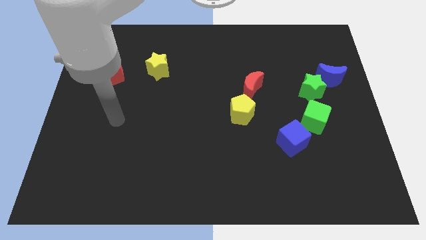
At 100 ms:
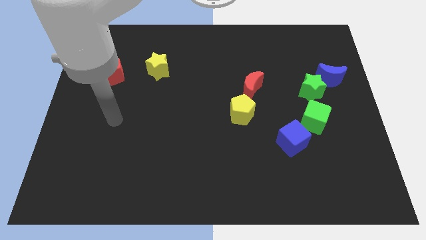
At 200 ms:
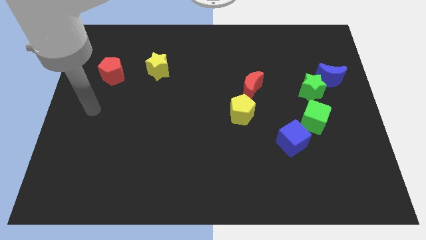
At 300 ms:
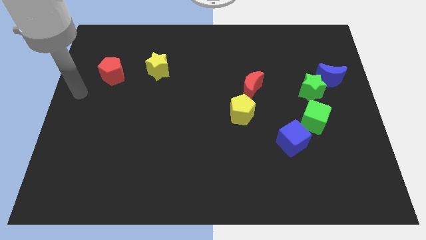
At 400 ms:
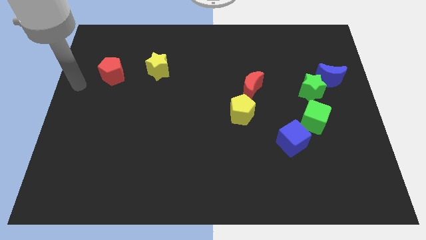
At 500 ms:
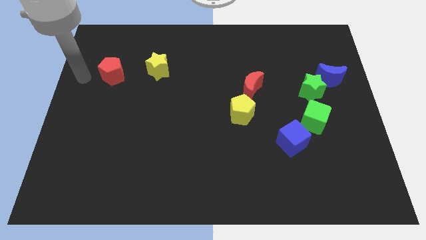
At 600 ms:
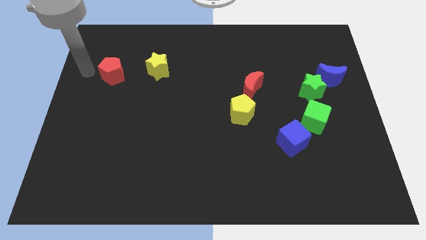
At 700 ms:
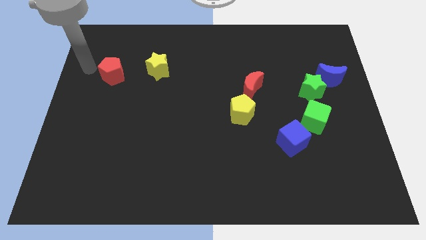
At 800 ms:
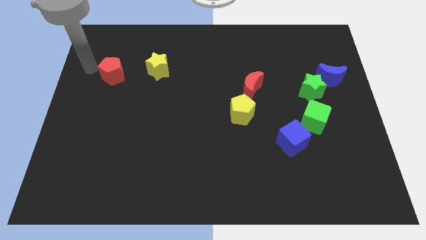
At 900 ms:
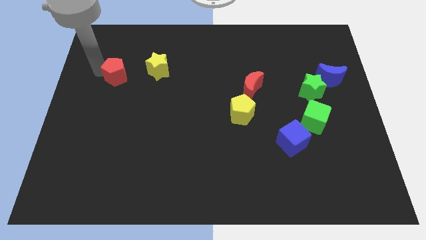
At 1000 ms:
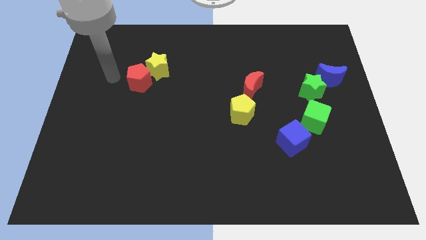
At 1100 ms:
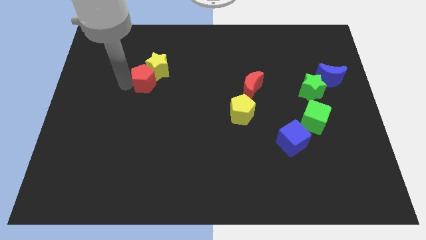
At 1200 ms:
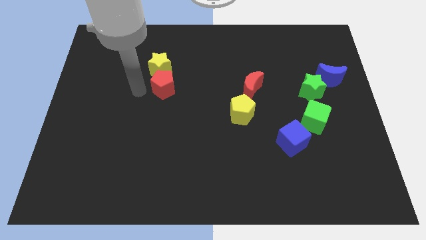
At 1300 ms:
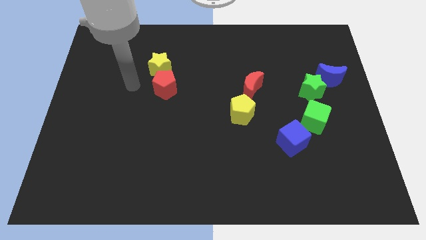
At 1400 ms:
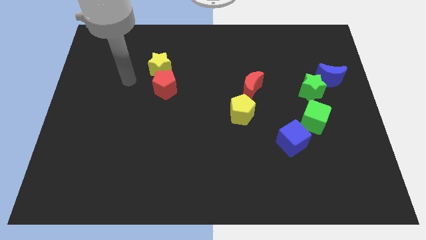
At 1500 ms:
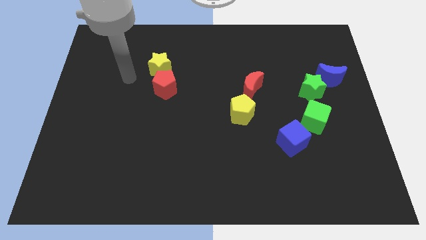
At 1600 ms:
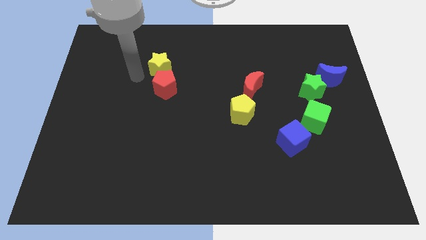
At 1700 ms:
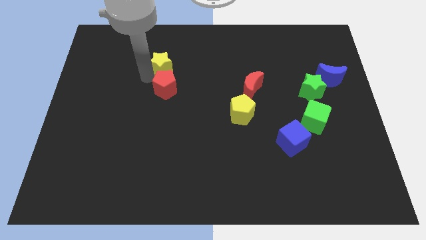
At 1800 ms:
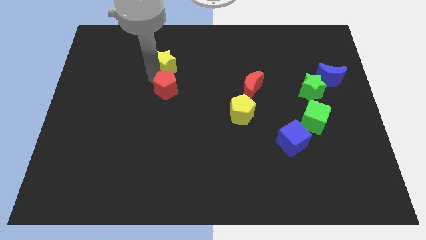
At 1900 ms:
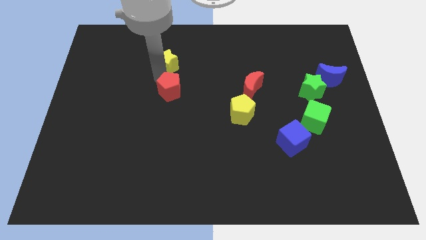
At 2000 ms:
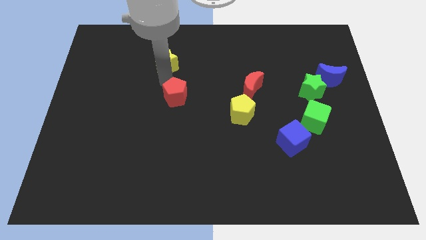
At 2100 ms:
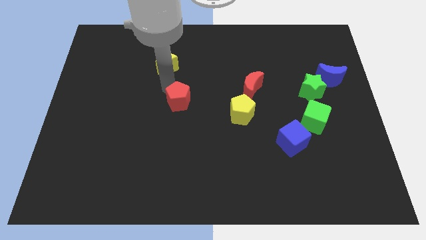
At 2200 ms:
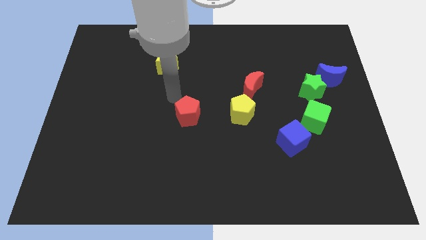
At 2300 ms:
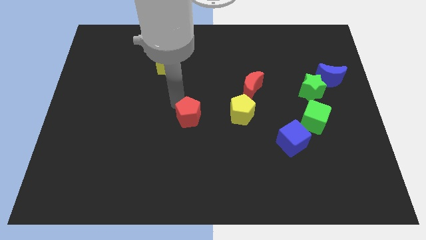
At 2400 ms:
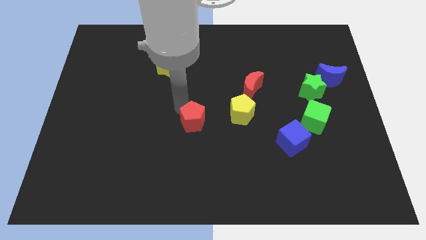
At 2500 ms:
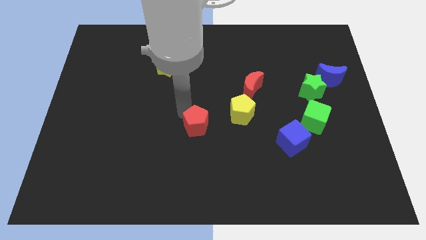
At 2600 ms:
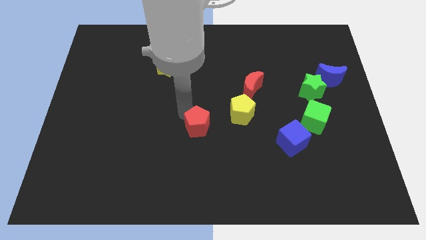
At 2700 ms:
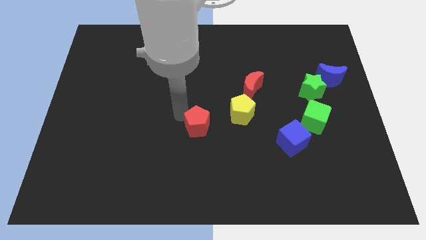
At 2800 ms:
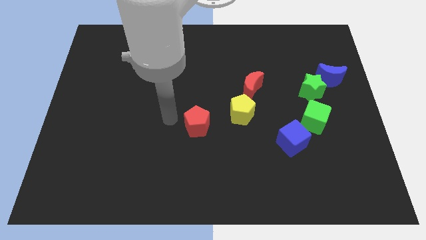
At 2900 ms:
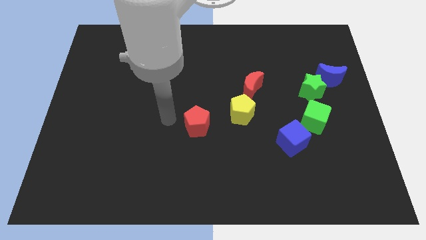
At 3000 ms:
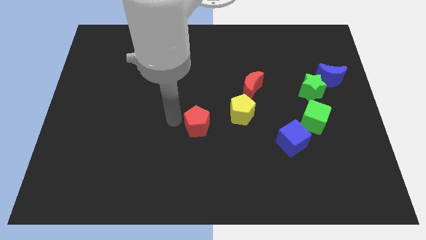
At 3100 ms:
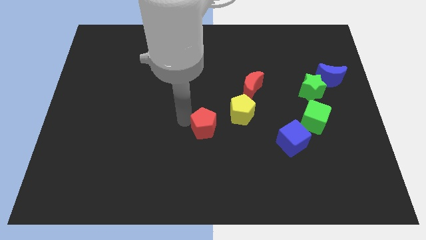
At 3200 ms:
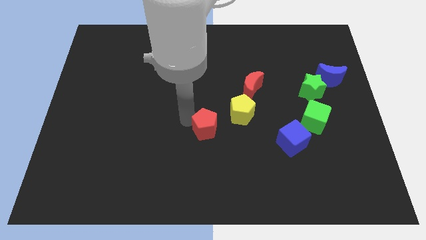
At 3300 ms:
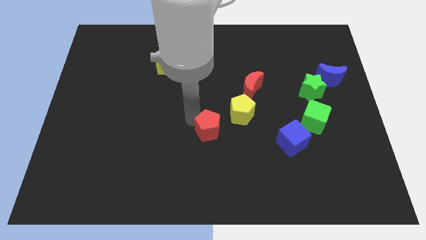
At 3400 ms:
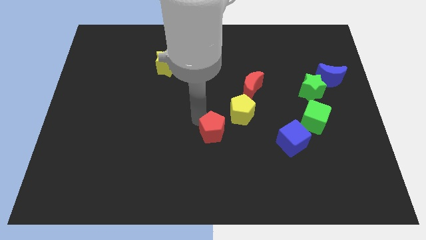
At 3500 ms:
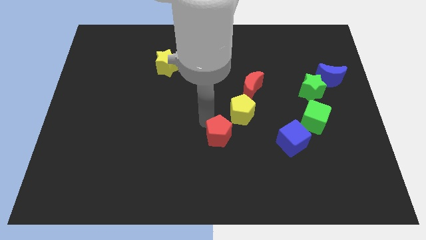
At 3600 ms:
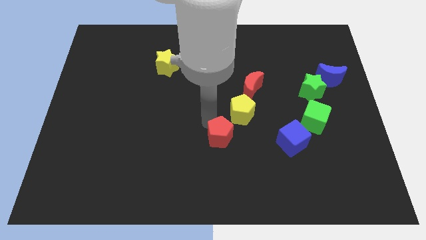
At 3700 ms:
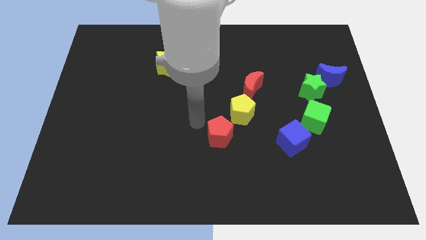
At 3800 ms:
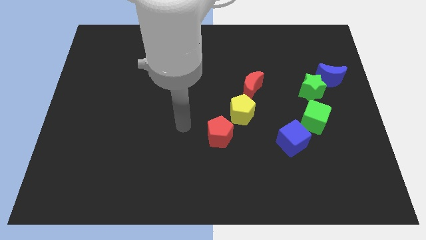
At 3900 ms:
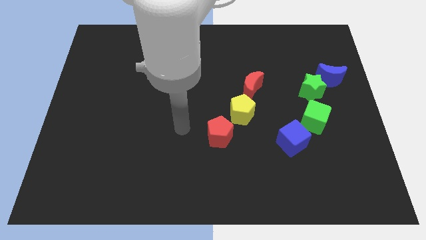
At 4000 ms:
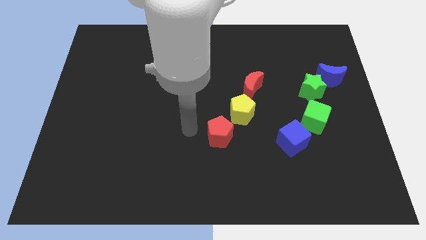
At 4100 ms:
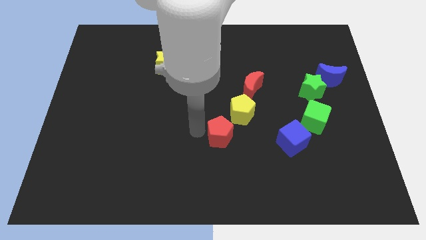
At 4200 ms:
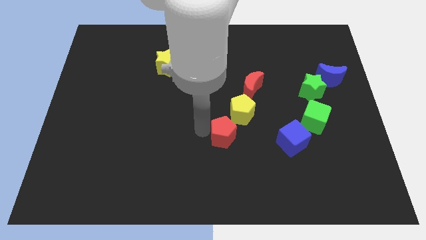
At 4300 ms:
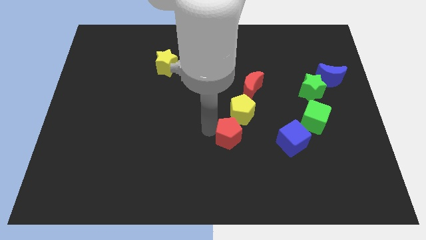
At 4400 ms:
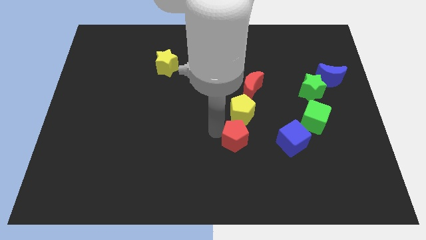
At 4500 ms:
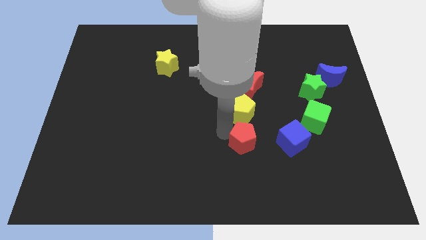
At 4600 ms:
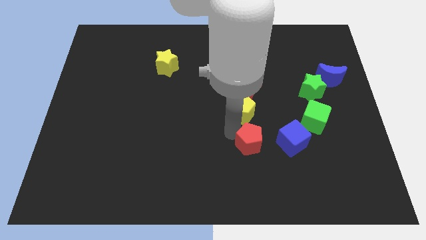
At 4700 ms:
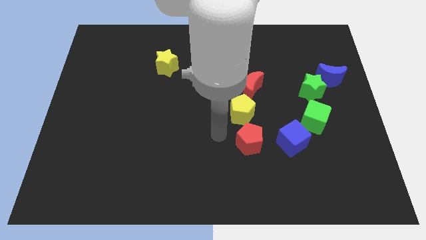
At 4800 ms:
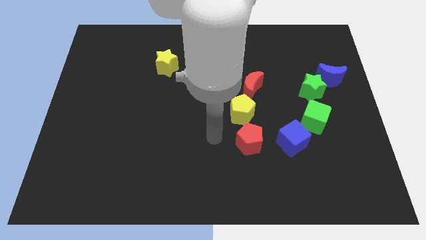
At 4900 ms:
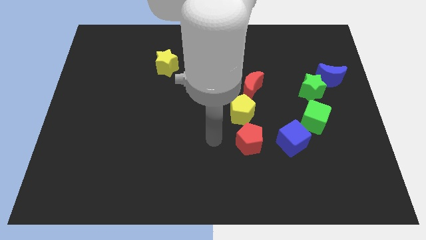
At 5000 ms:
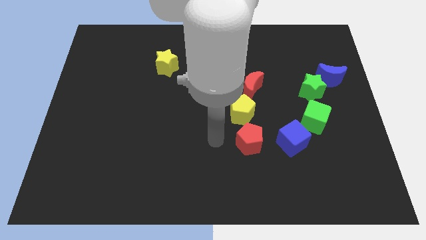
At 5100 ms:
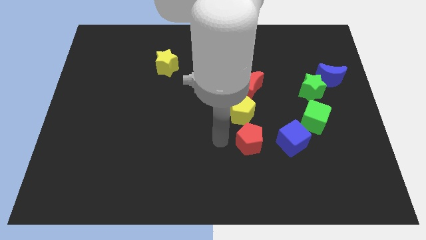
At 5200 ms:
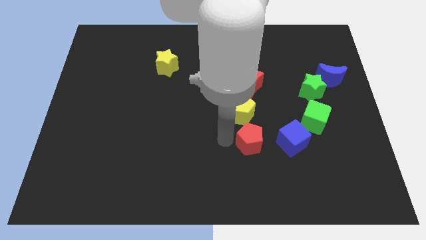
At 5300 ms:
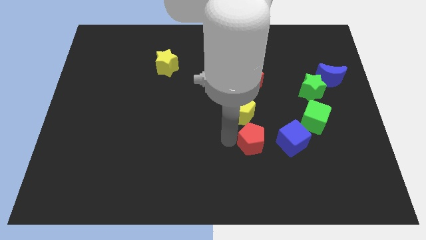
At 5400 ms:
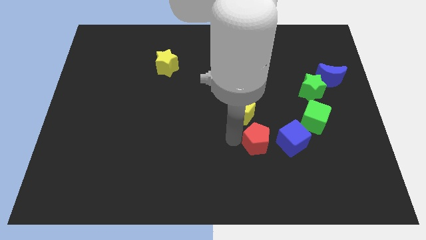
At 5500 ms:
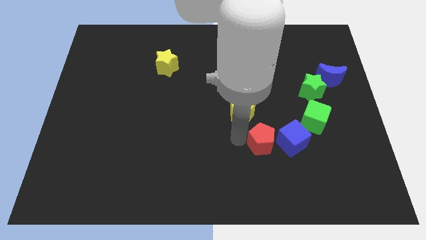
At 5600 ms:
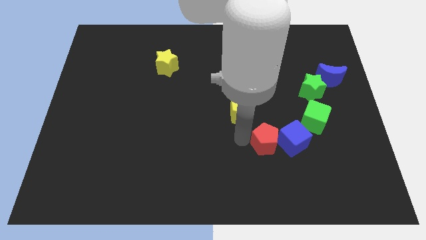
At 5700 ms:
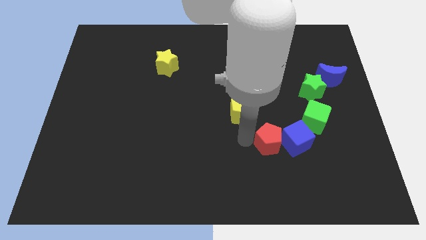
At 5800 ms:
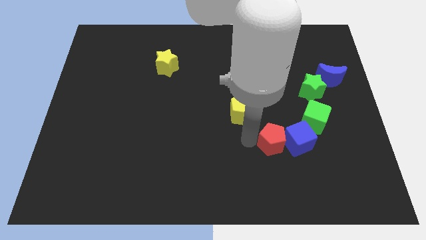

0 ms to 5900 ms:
push the red pentagon towards the blue cube

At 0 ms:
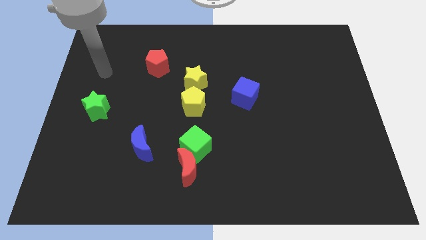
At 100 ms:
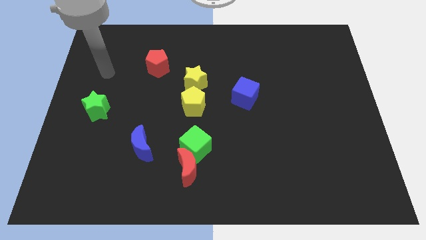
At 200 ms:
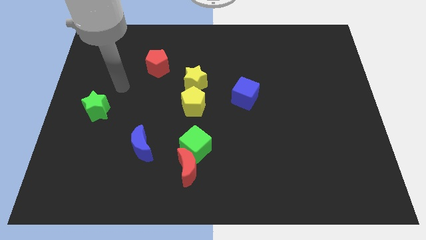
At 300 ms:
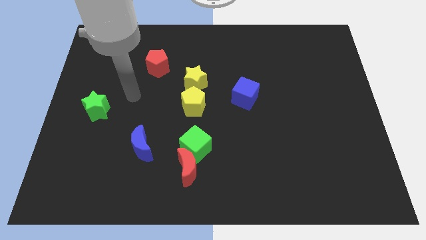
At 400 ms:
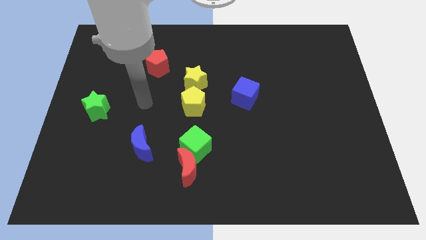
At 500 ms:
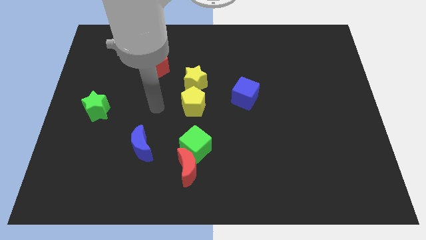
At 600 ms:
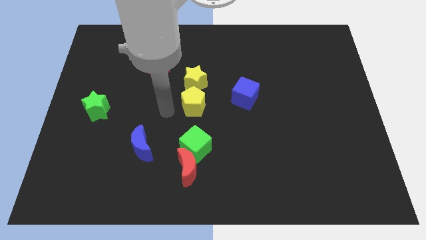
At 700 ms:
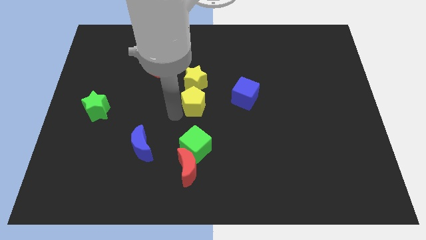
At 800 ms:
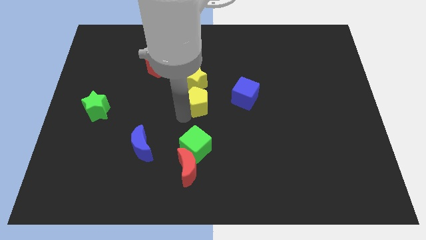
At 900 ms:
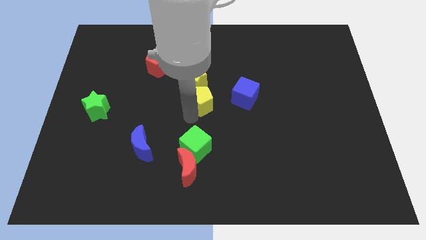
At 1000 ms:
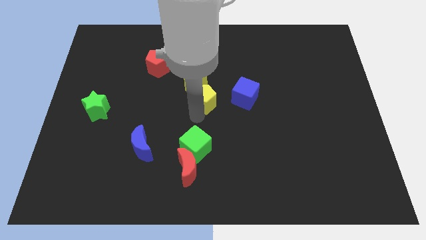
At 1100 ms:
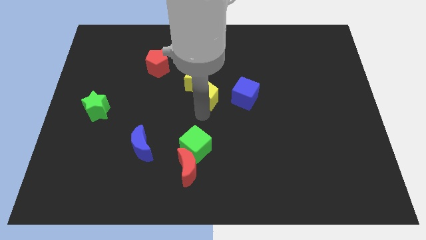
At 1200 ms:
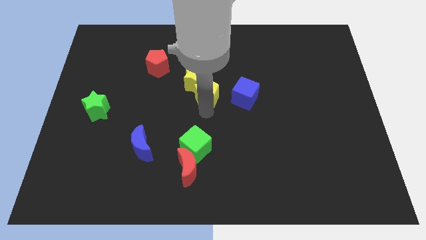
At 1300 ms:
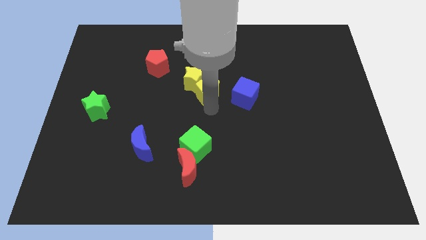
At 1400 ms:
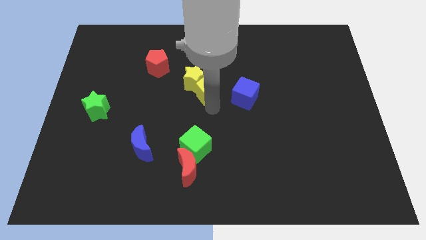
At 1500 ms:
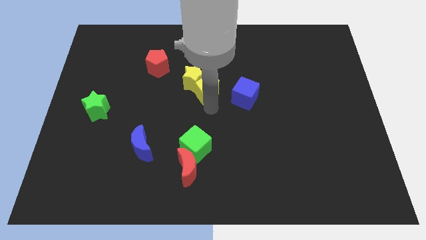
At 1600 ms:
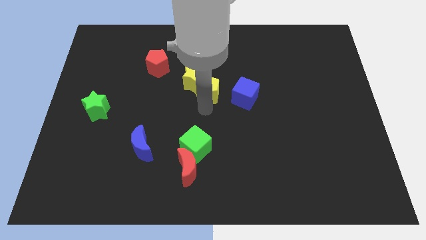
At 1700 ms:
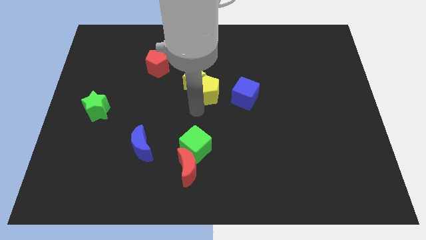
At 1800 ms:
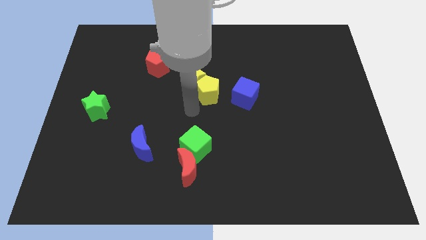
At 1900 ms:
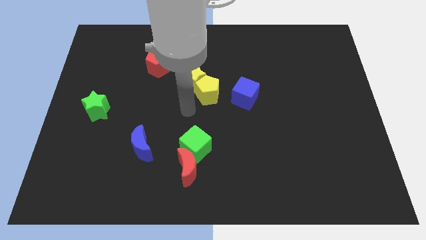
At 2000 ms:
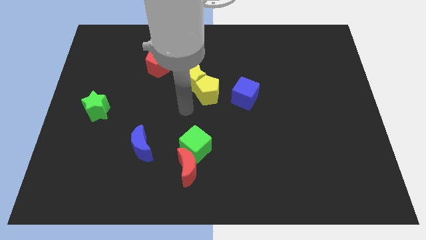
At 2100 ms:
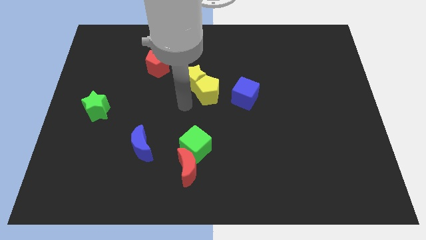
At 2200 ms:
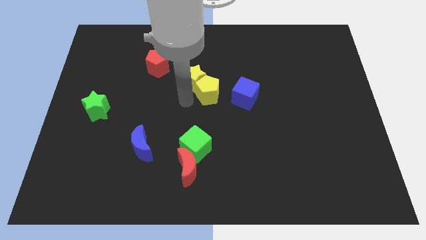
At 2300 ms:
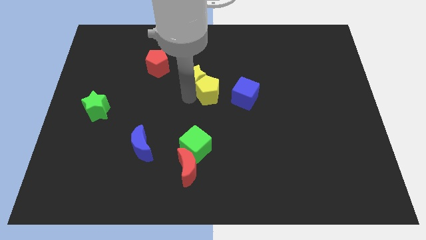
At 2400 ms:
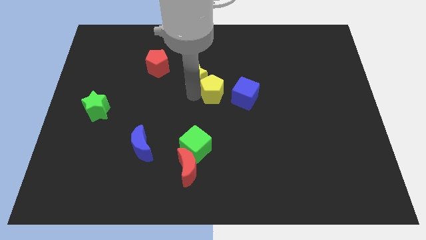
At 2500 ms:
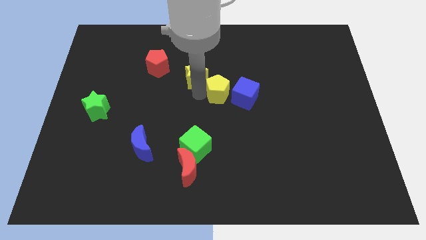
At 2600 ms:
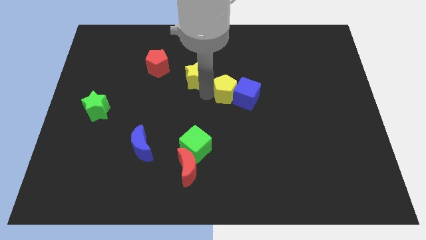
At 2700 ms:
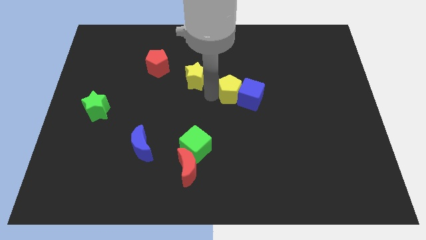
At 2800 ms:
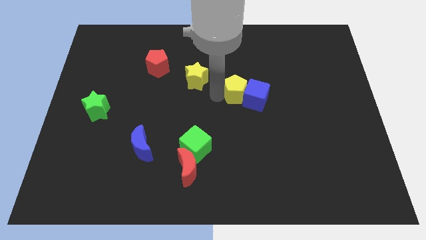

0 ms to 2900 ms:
move the yellow pentagon towards the blue cube
